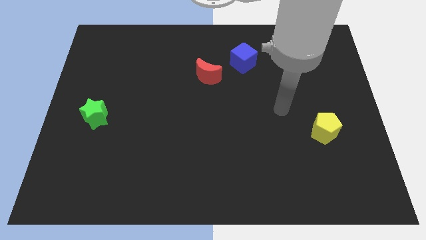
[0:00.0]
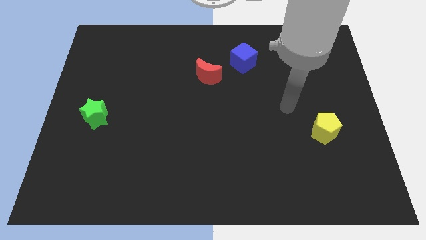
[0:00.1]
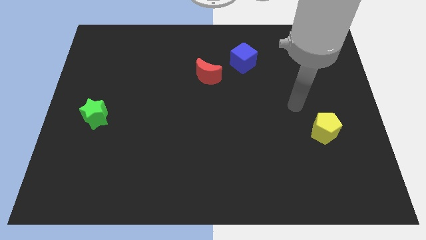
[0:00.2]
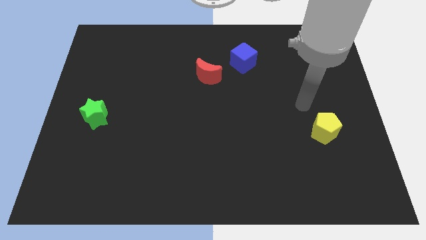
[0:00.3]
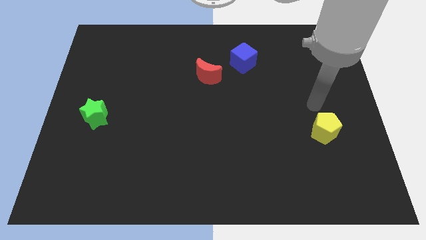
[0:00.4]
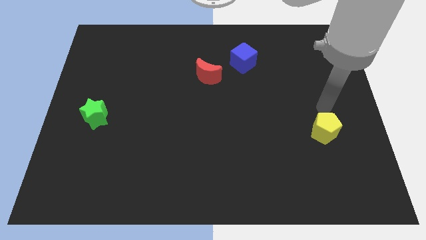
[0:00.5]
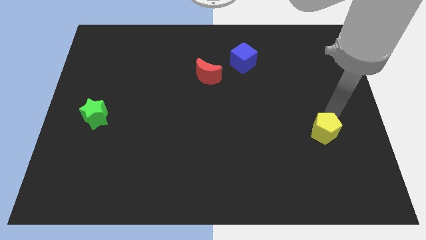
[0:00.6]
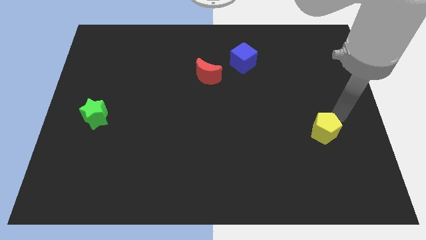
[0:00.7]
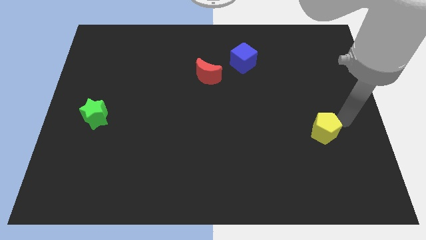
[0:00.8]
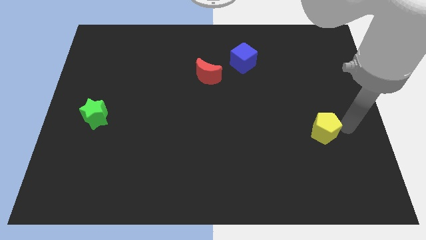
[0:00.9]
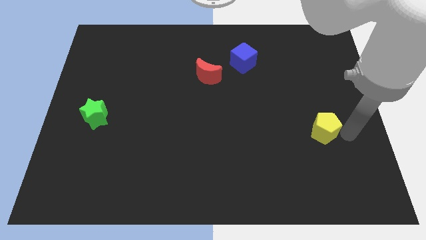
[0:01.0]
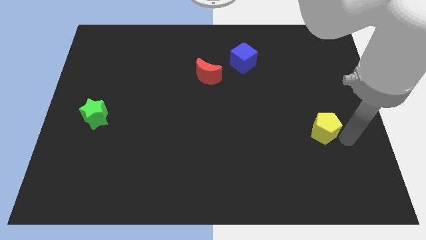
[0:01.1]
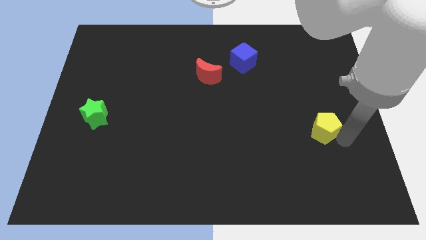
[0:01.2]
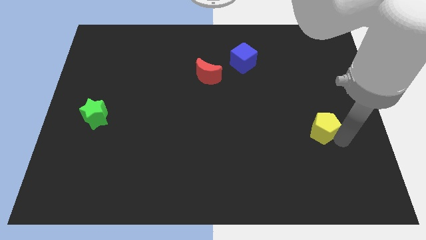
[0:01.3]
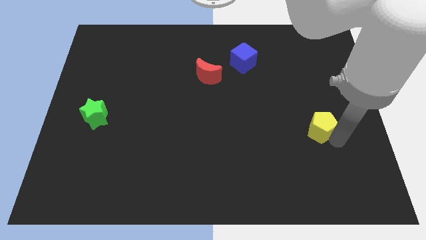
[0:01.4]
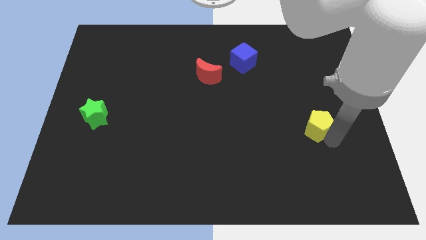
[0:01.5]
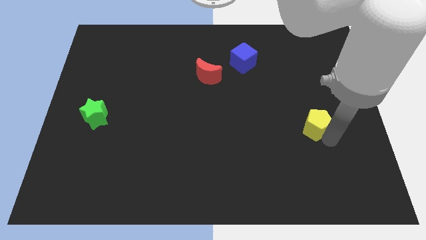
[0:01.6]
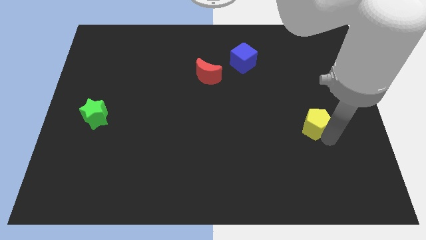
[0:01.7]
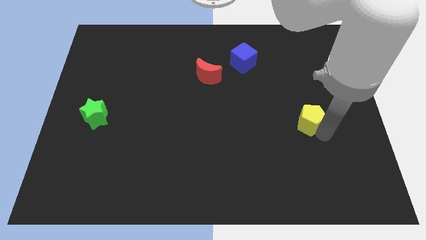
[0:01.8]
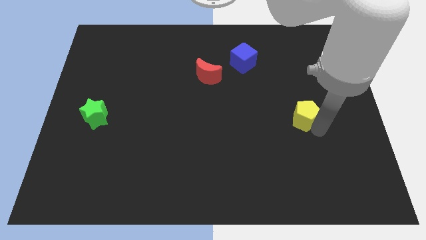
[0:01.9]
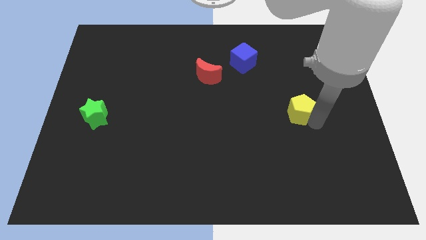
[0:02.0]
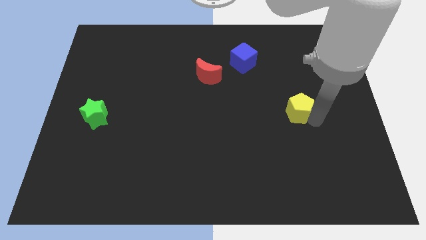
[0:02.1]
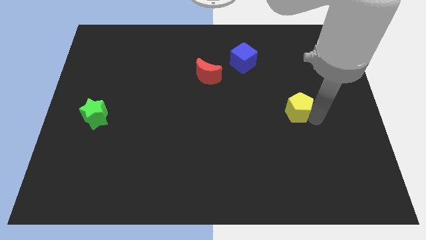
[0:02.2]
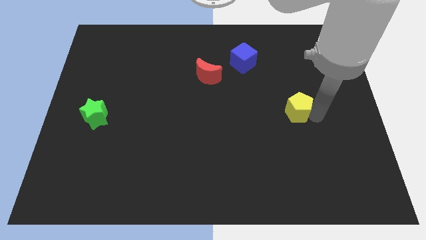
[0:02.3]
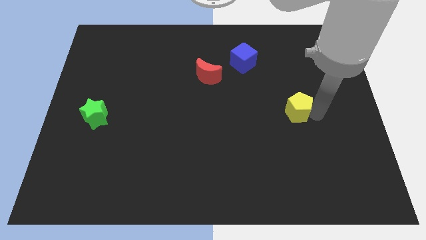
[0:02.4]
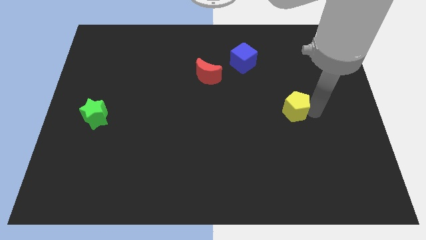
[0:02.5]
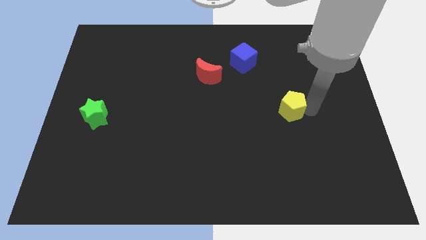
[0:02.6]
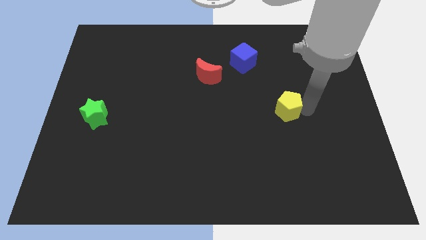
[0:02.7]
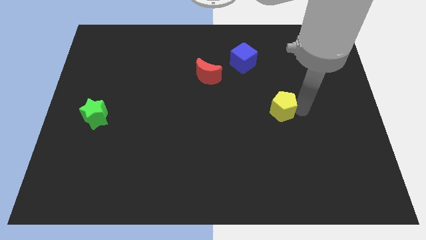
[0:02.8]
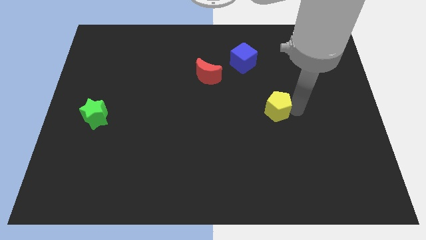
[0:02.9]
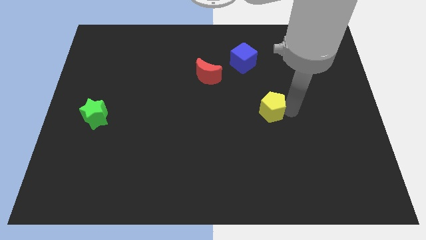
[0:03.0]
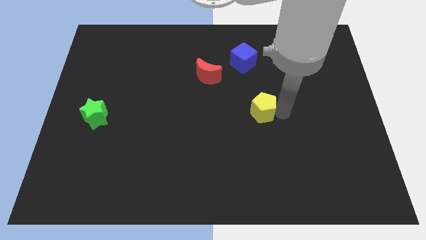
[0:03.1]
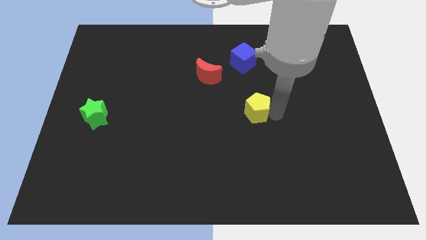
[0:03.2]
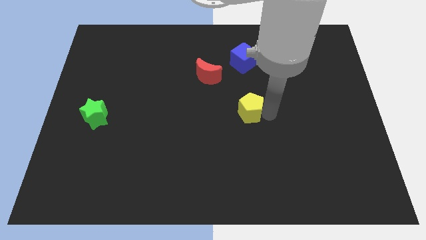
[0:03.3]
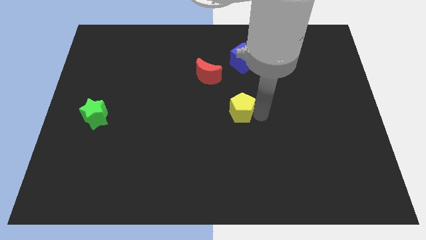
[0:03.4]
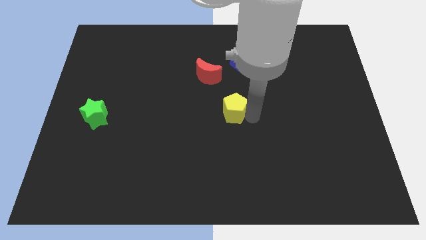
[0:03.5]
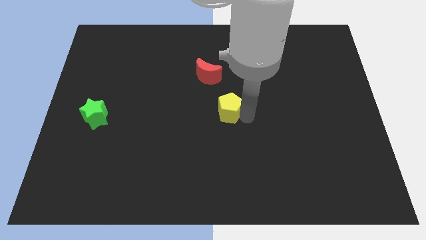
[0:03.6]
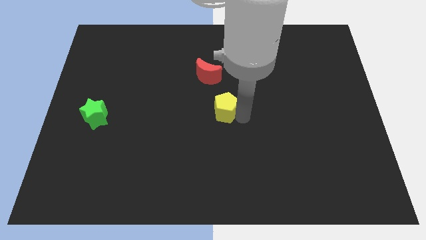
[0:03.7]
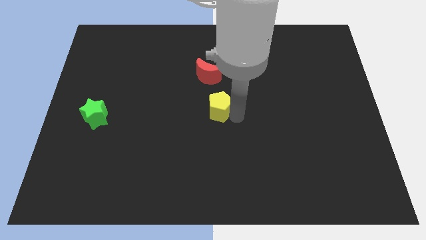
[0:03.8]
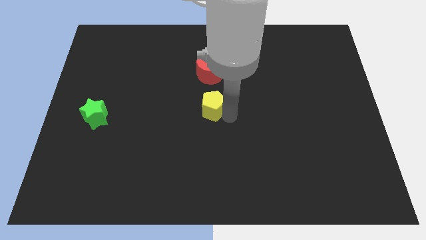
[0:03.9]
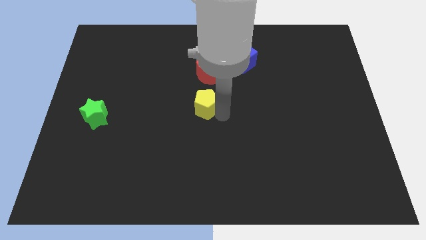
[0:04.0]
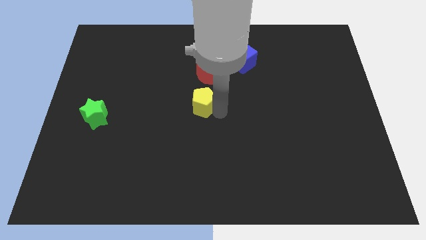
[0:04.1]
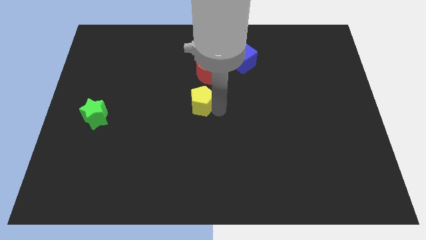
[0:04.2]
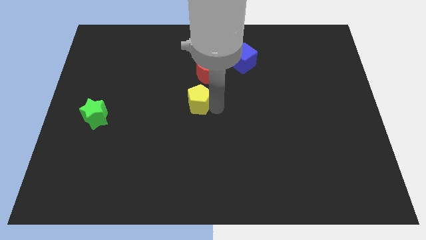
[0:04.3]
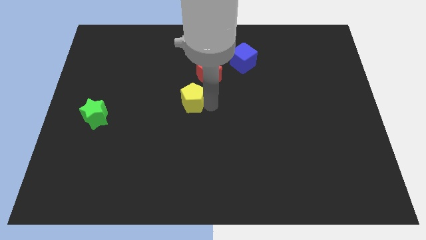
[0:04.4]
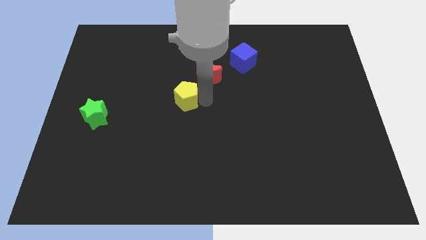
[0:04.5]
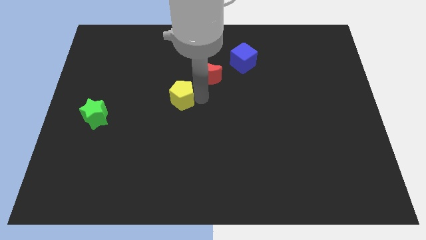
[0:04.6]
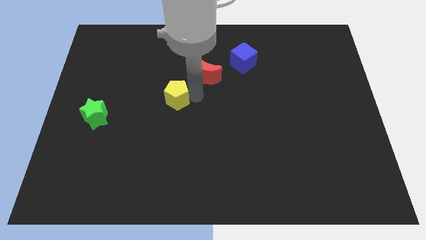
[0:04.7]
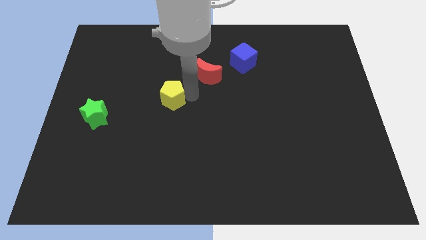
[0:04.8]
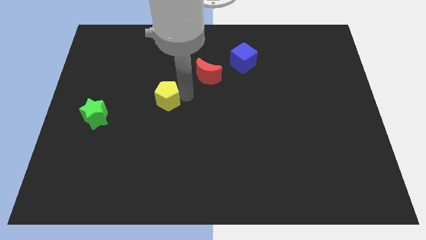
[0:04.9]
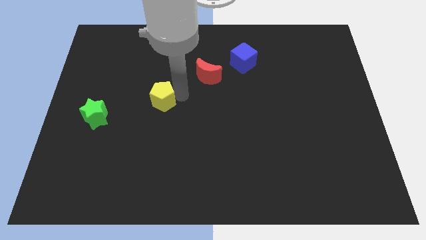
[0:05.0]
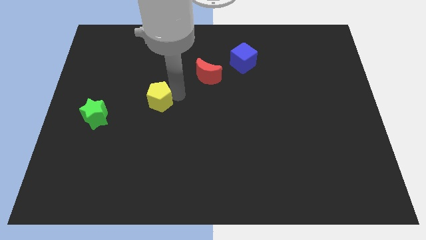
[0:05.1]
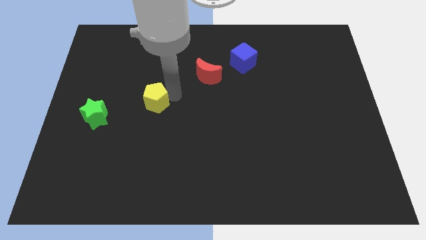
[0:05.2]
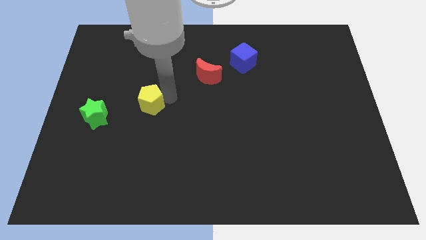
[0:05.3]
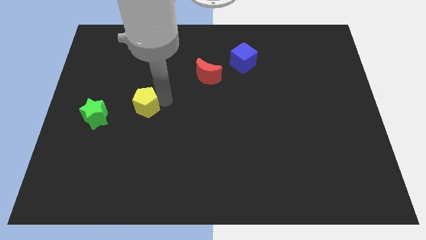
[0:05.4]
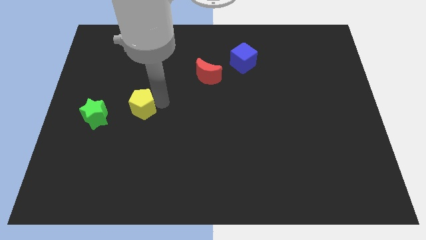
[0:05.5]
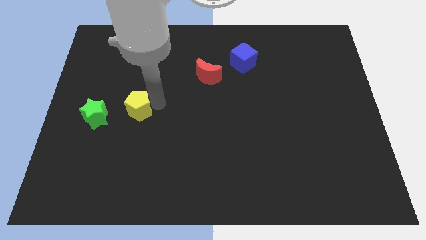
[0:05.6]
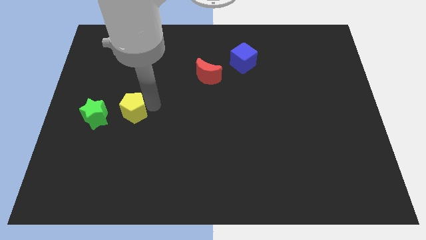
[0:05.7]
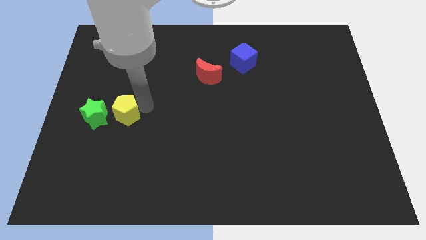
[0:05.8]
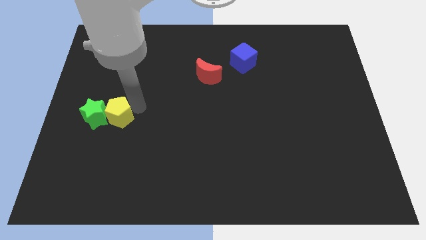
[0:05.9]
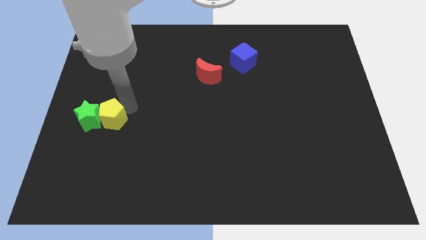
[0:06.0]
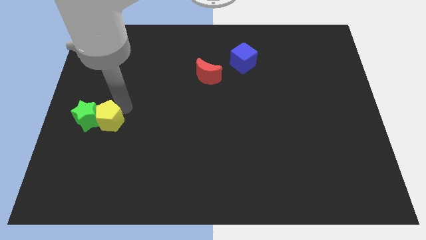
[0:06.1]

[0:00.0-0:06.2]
put the yellow pentagon close to the green star

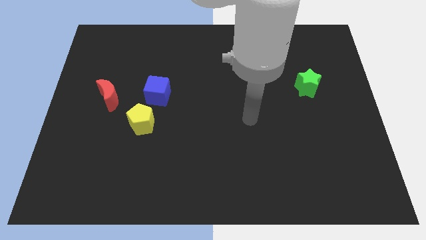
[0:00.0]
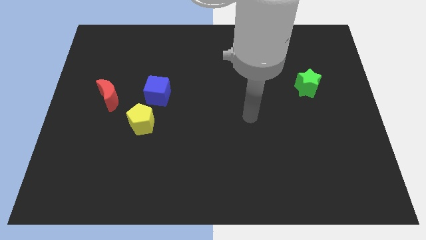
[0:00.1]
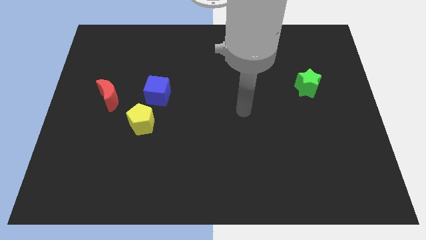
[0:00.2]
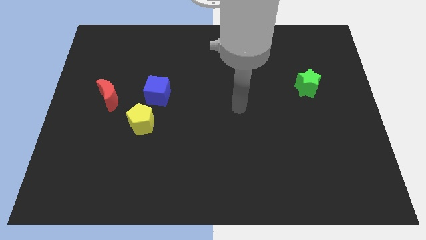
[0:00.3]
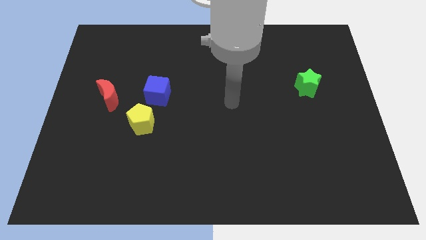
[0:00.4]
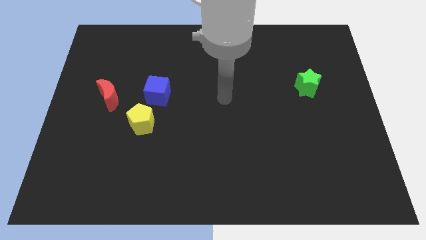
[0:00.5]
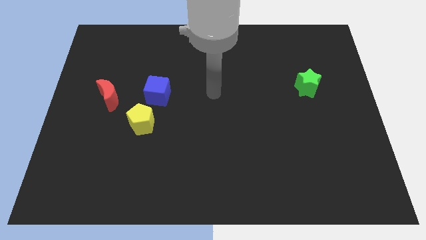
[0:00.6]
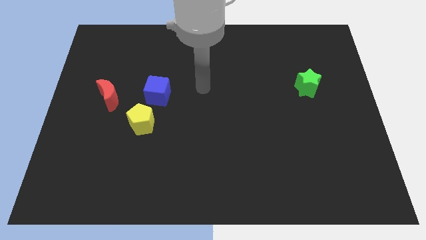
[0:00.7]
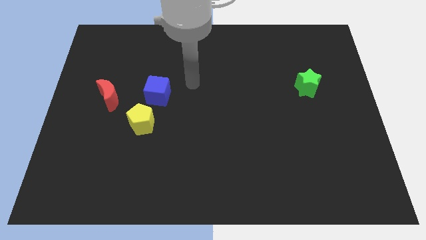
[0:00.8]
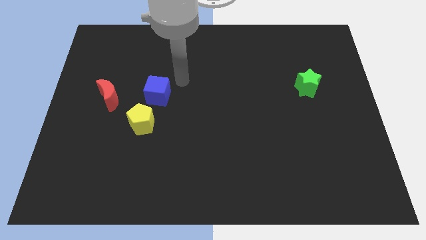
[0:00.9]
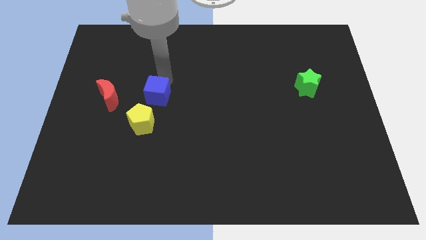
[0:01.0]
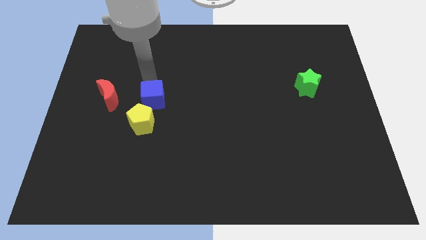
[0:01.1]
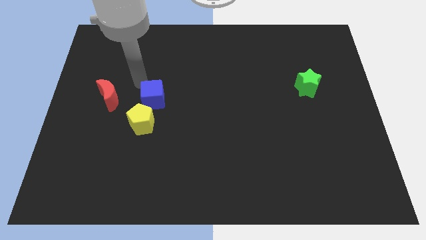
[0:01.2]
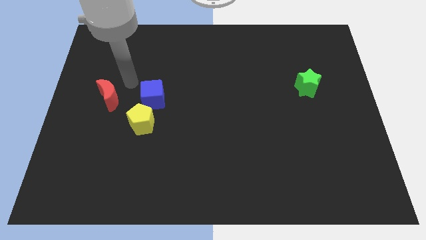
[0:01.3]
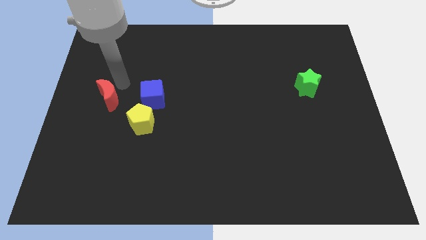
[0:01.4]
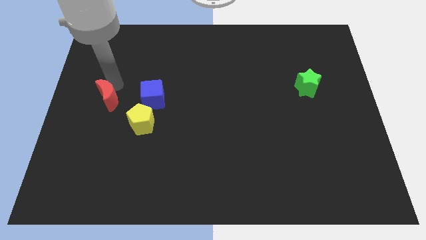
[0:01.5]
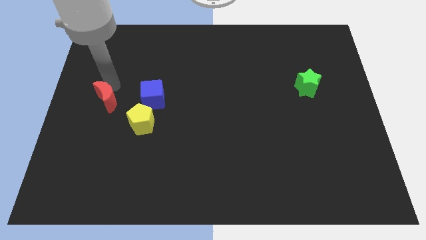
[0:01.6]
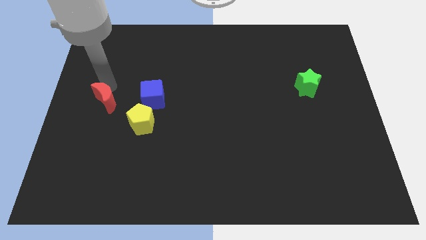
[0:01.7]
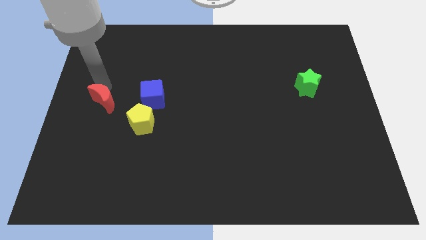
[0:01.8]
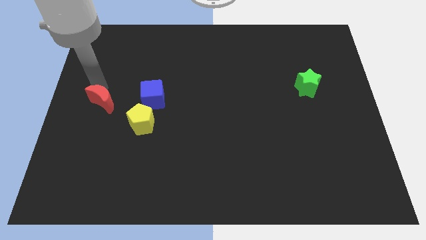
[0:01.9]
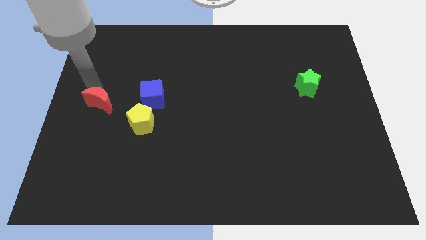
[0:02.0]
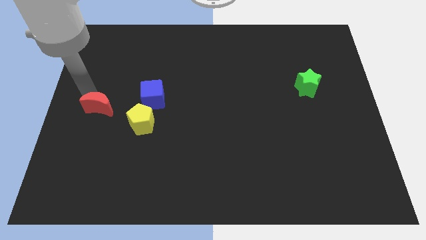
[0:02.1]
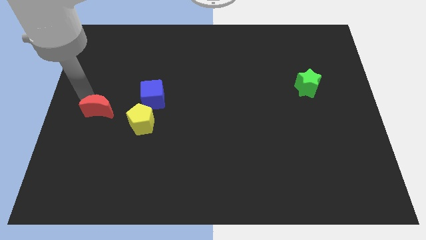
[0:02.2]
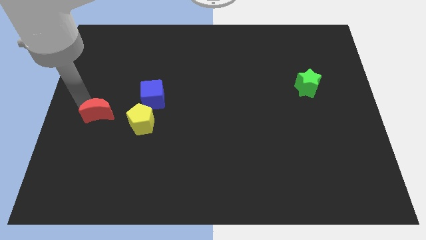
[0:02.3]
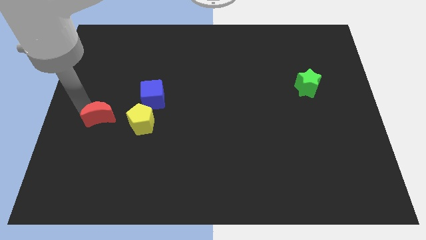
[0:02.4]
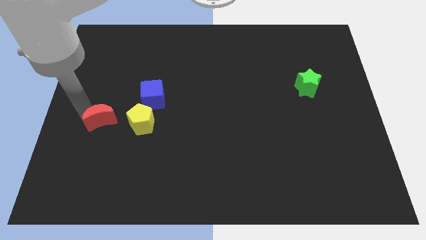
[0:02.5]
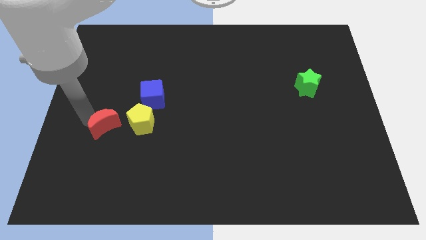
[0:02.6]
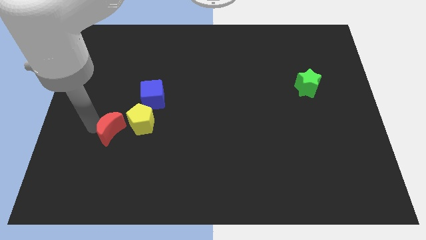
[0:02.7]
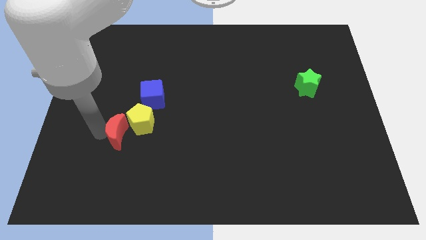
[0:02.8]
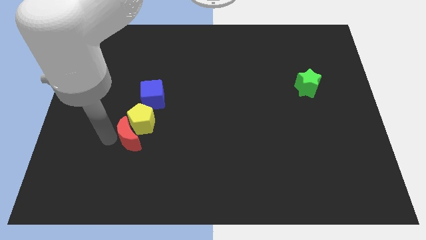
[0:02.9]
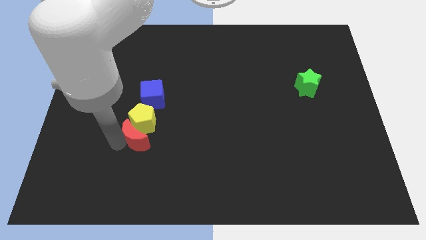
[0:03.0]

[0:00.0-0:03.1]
move the red block close to the yellow block
